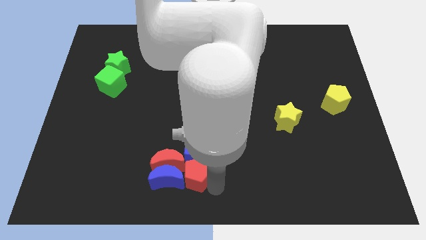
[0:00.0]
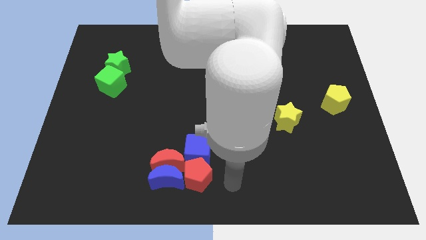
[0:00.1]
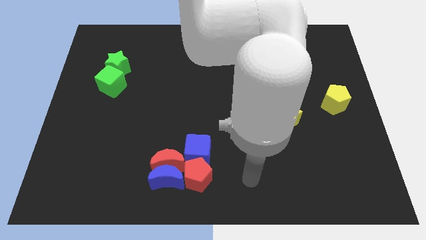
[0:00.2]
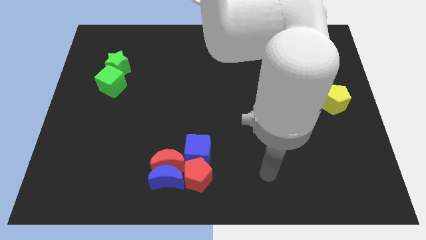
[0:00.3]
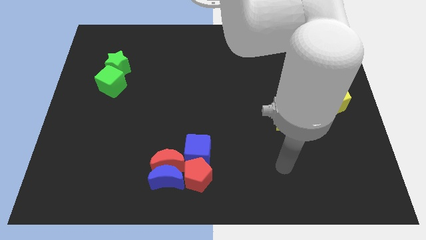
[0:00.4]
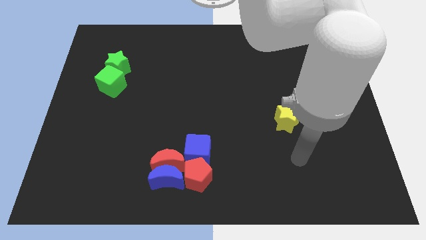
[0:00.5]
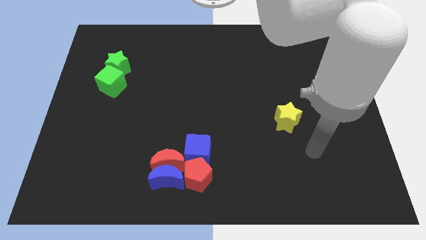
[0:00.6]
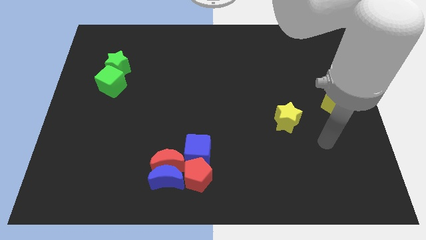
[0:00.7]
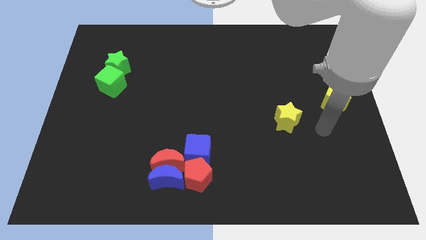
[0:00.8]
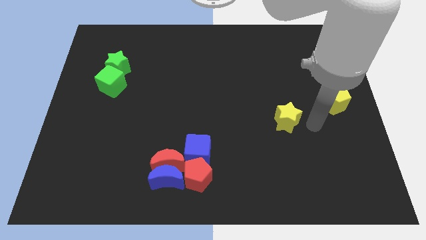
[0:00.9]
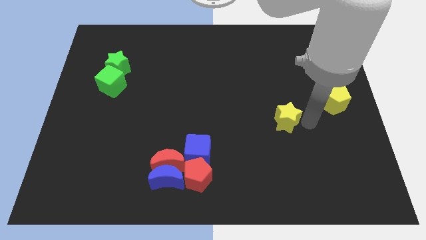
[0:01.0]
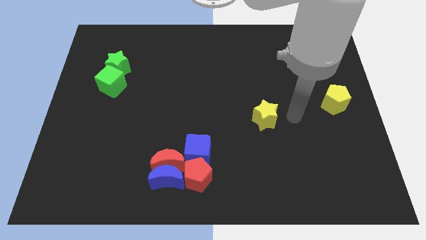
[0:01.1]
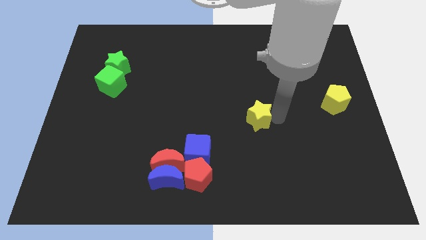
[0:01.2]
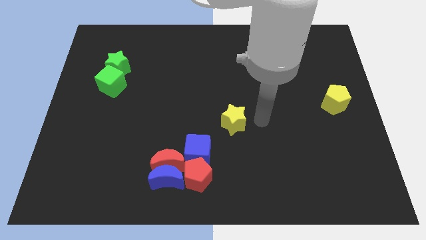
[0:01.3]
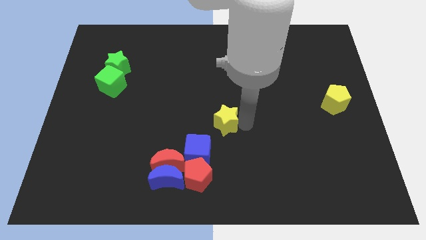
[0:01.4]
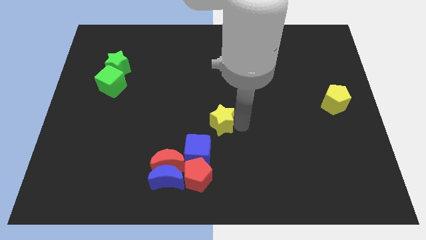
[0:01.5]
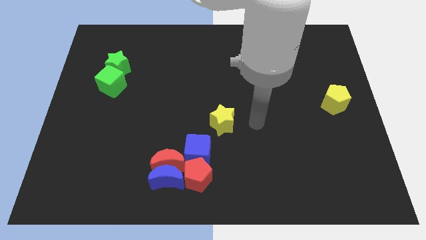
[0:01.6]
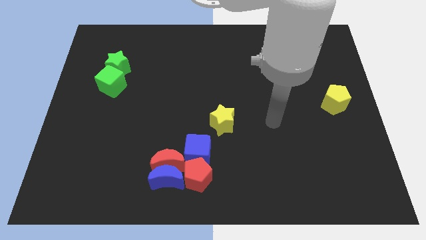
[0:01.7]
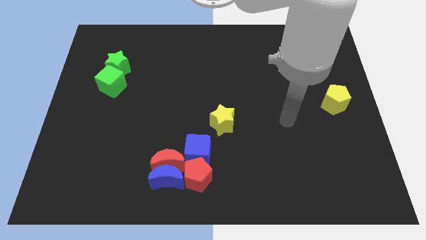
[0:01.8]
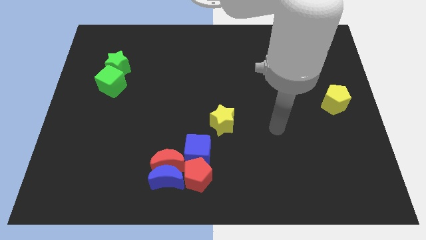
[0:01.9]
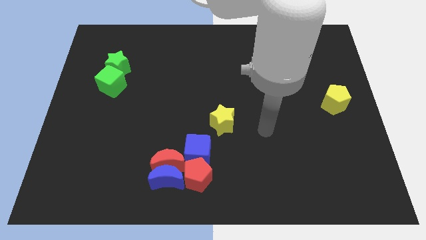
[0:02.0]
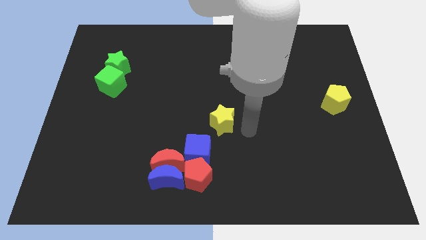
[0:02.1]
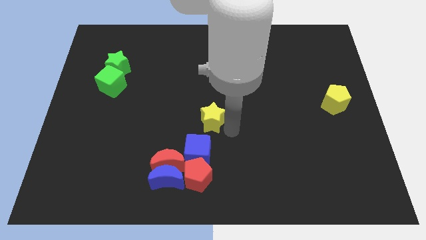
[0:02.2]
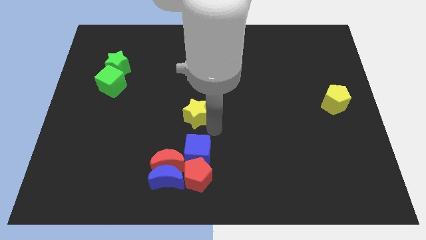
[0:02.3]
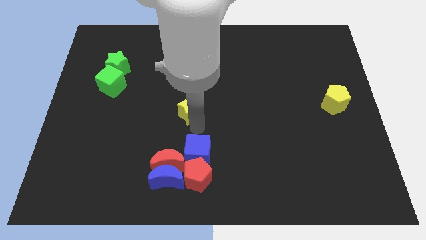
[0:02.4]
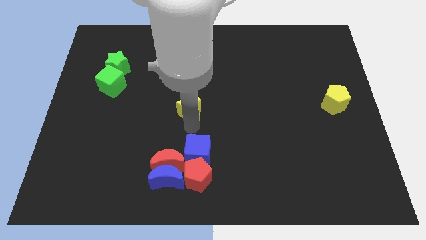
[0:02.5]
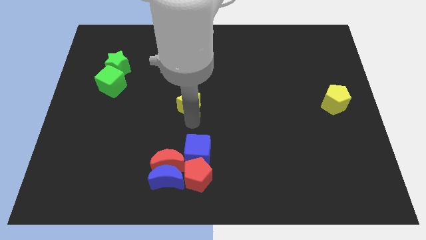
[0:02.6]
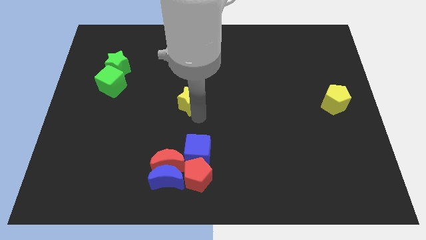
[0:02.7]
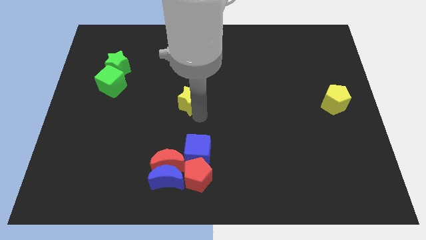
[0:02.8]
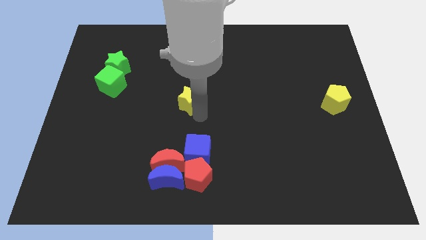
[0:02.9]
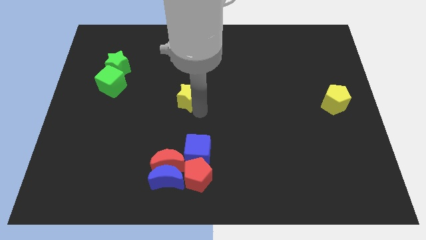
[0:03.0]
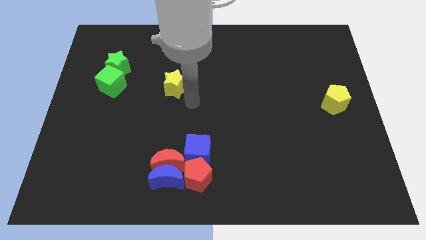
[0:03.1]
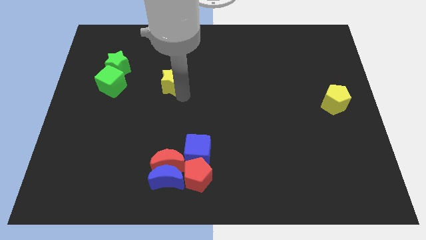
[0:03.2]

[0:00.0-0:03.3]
place the yellow star right to the green cube

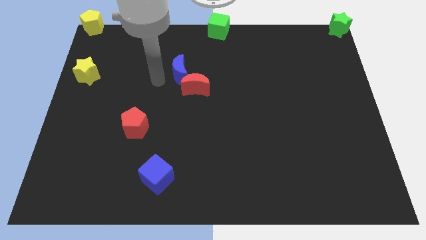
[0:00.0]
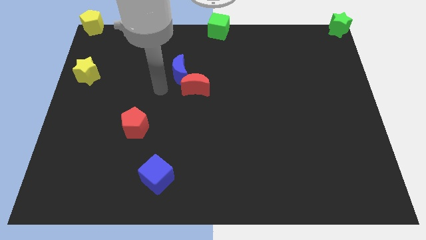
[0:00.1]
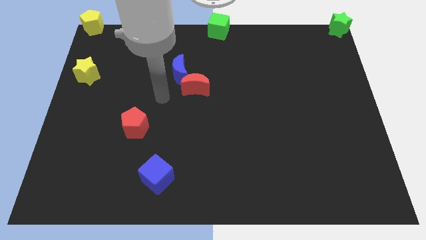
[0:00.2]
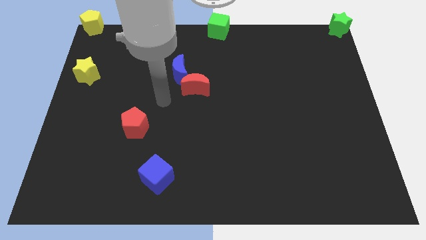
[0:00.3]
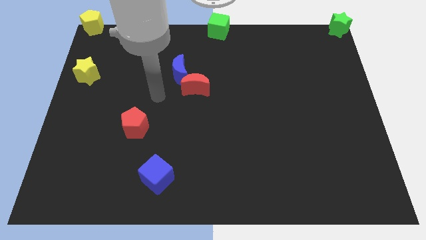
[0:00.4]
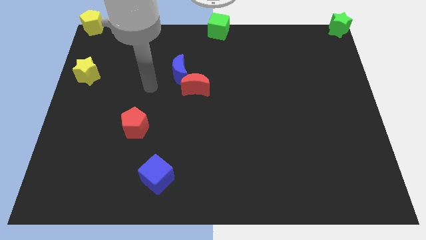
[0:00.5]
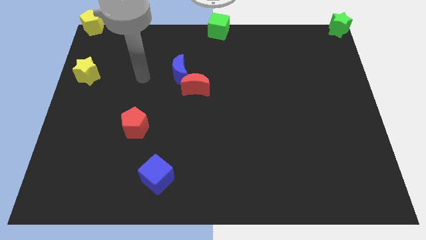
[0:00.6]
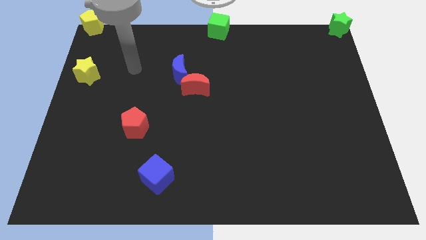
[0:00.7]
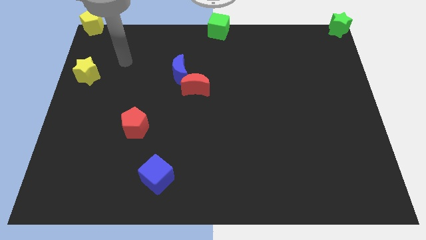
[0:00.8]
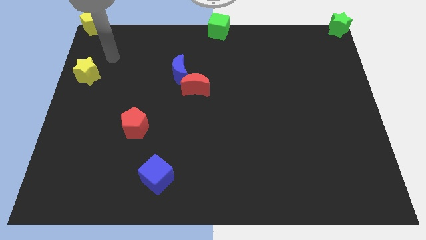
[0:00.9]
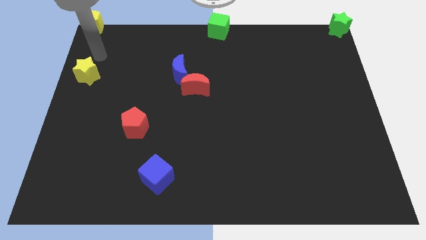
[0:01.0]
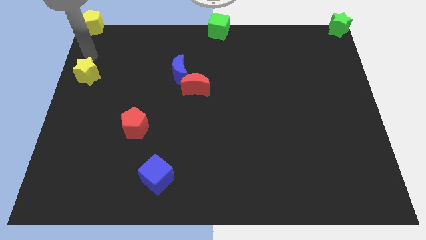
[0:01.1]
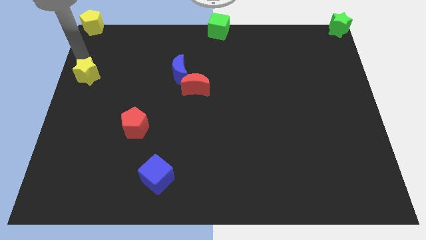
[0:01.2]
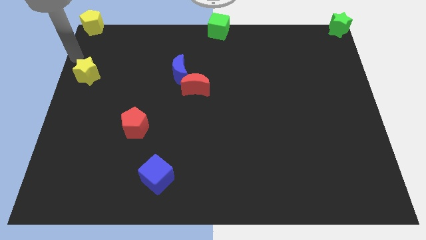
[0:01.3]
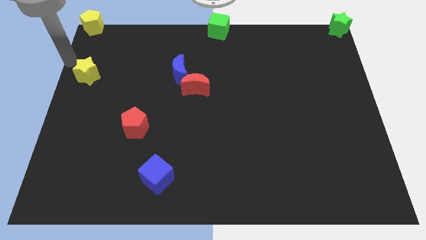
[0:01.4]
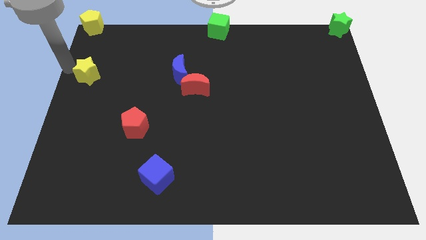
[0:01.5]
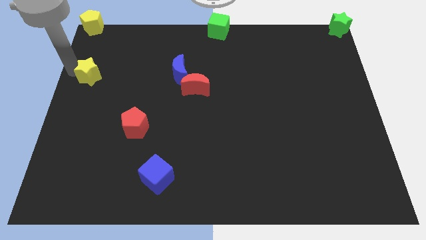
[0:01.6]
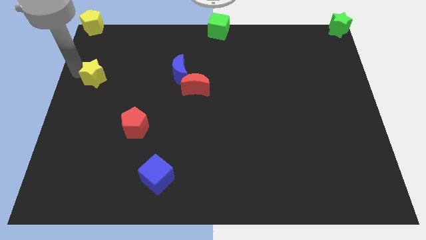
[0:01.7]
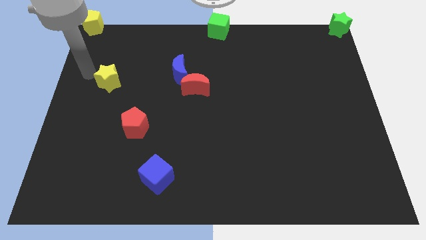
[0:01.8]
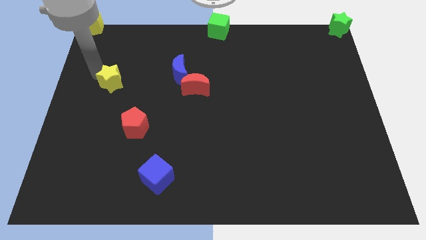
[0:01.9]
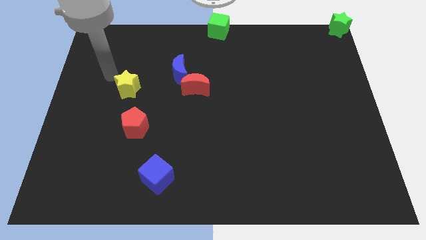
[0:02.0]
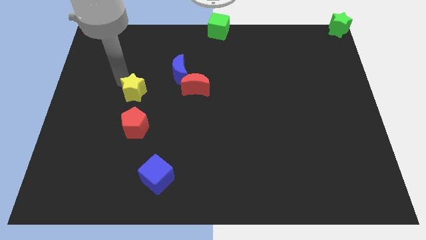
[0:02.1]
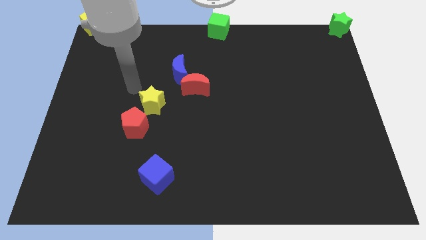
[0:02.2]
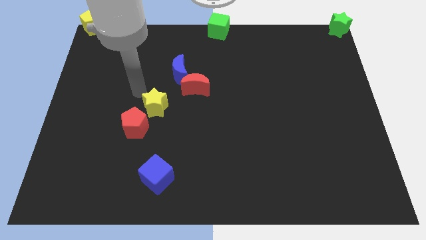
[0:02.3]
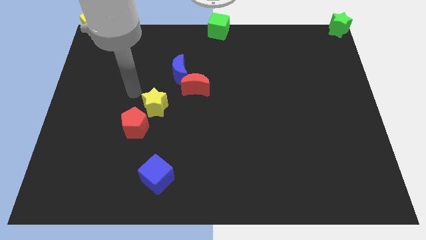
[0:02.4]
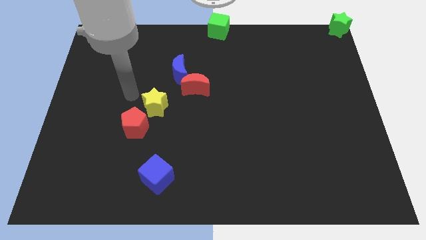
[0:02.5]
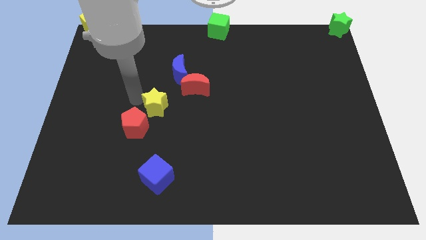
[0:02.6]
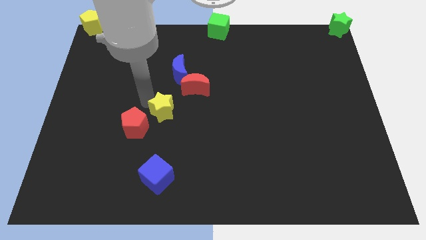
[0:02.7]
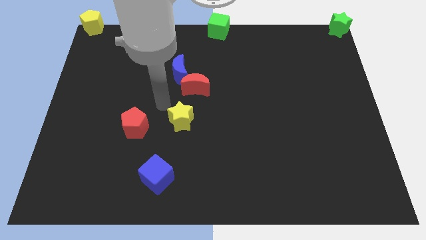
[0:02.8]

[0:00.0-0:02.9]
move the yellow star right to the red pentagon

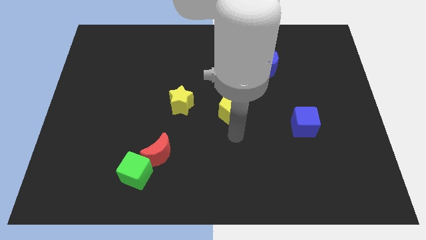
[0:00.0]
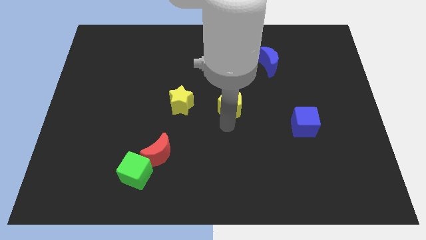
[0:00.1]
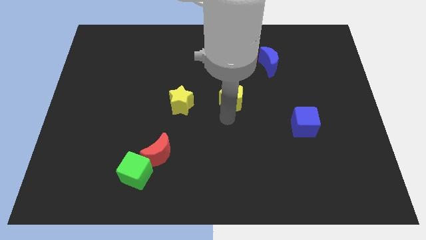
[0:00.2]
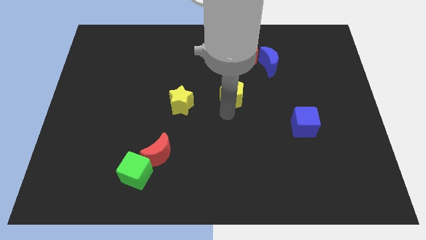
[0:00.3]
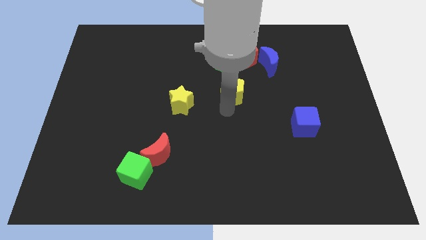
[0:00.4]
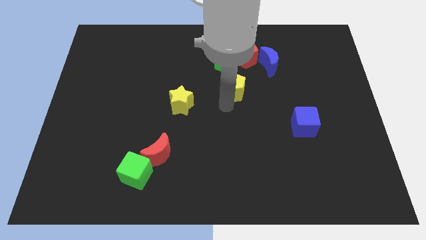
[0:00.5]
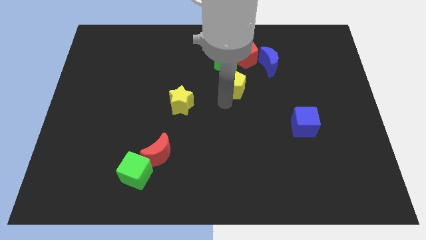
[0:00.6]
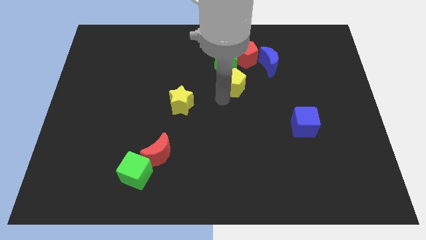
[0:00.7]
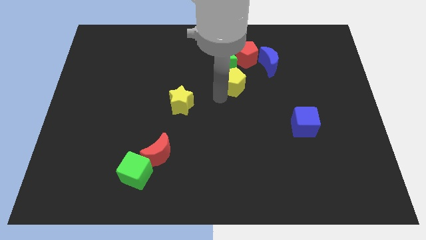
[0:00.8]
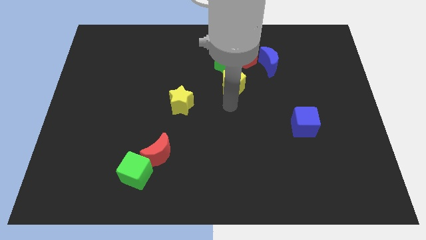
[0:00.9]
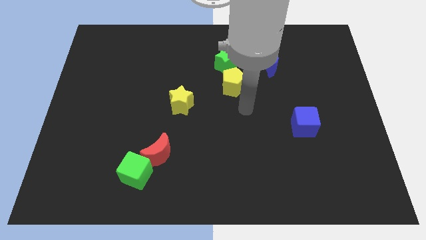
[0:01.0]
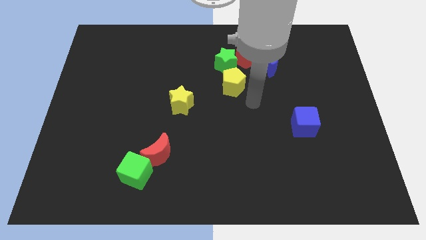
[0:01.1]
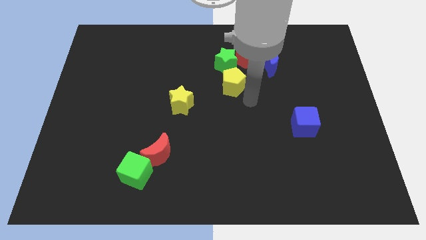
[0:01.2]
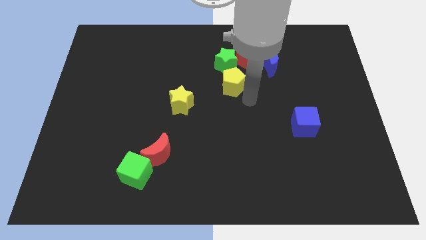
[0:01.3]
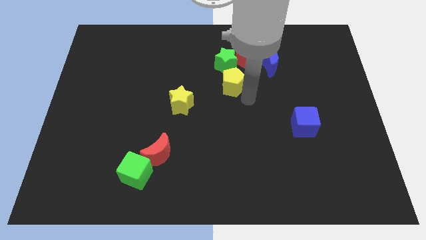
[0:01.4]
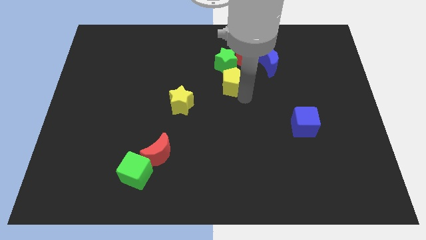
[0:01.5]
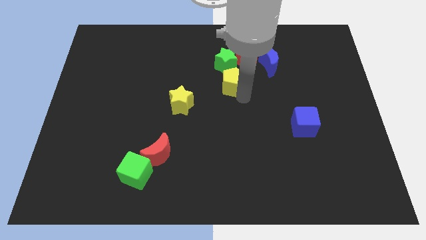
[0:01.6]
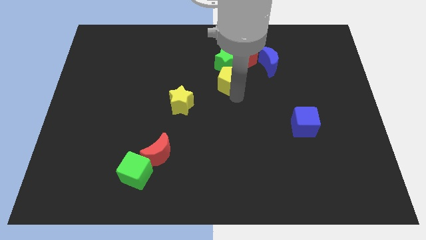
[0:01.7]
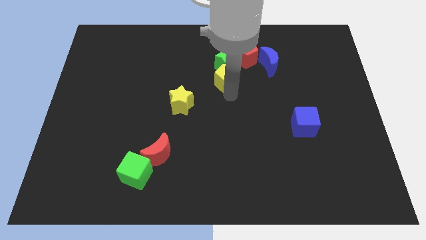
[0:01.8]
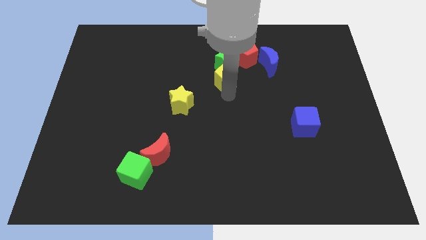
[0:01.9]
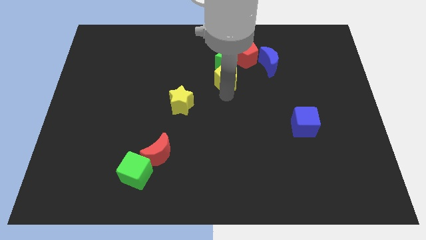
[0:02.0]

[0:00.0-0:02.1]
move the yellow pentagon below the green star

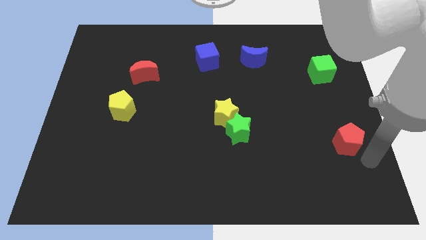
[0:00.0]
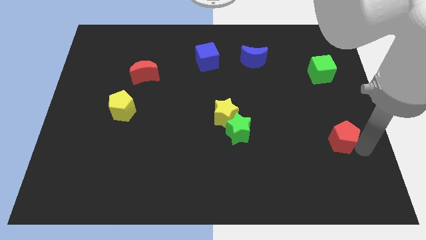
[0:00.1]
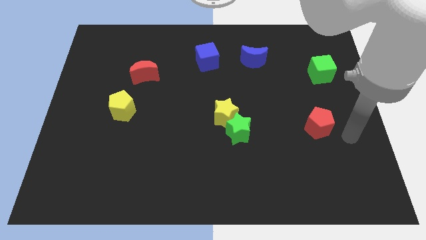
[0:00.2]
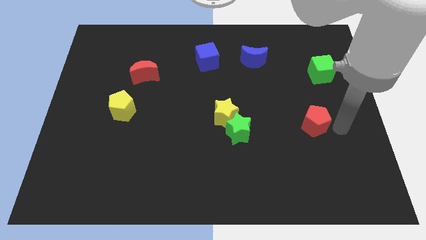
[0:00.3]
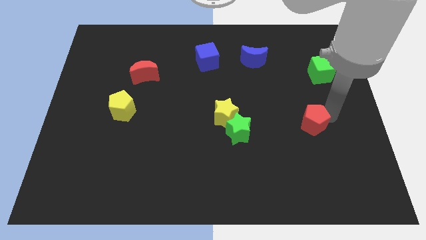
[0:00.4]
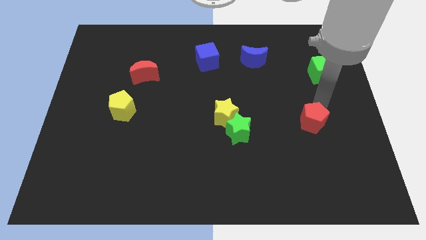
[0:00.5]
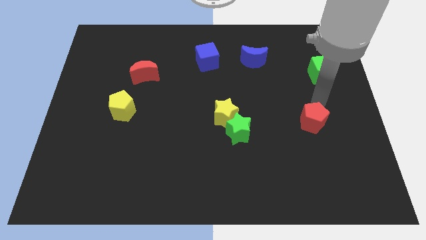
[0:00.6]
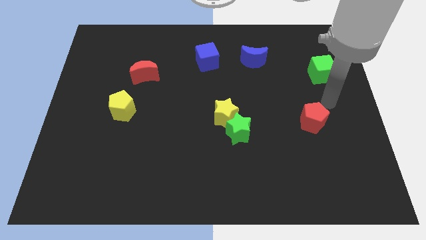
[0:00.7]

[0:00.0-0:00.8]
place red pentagon below green cube
